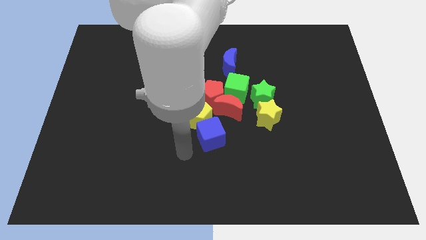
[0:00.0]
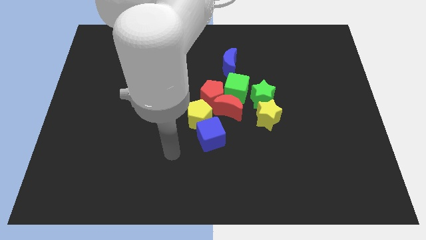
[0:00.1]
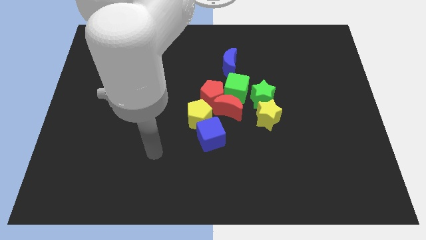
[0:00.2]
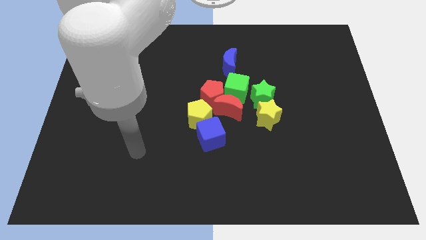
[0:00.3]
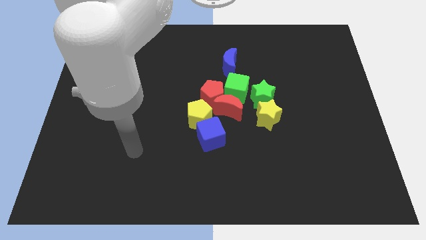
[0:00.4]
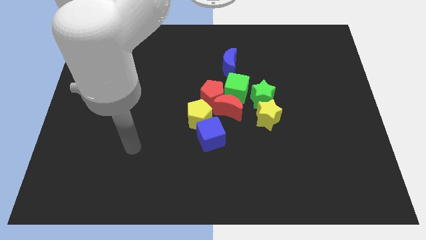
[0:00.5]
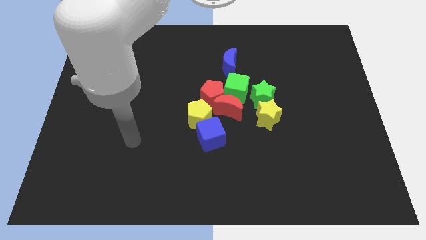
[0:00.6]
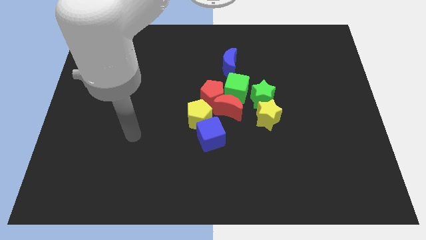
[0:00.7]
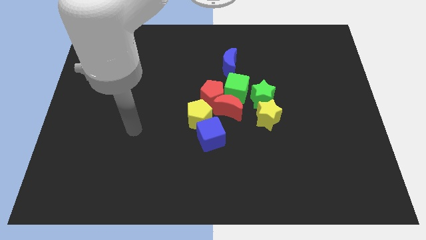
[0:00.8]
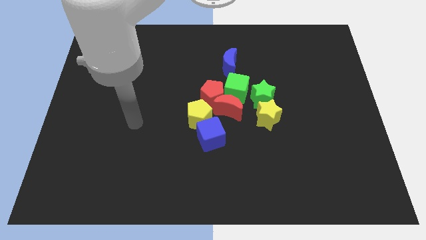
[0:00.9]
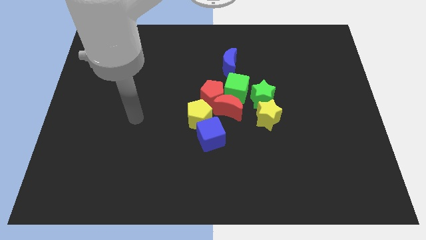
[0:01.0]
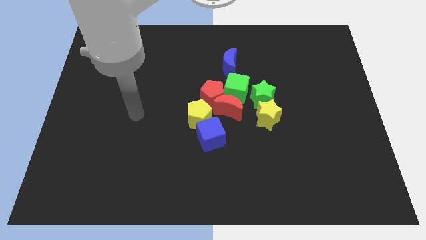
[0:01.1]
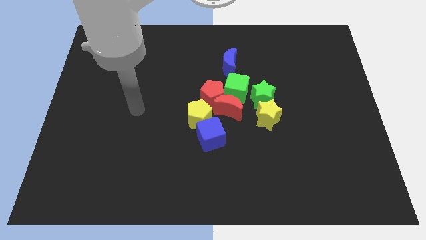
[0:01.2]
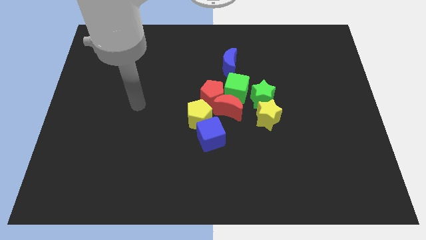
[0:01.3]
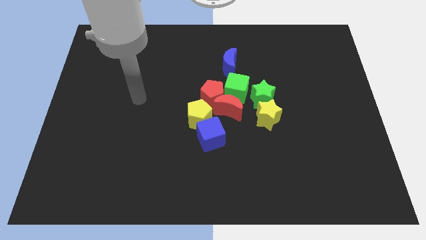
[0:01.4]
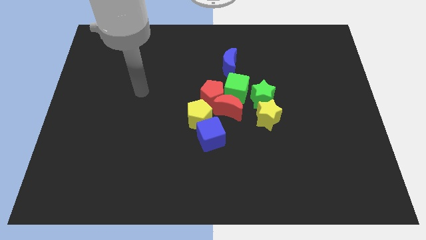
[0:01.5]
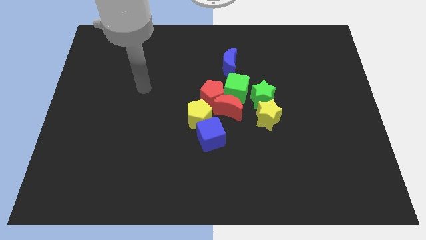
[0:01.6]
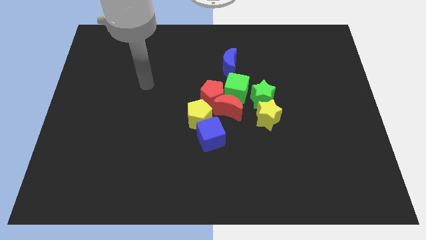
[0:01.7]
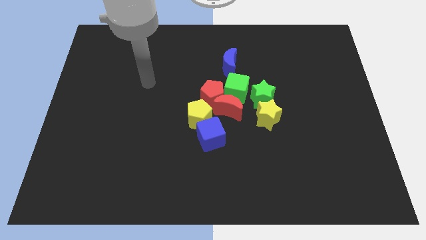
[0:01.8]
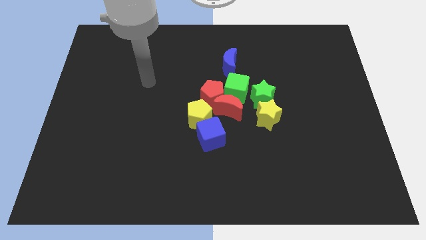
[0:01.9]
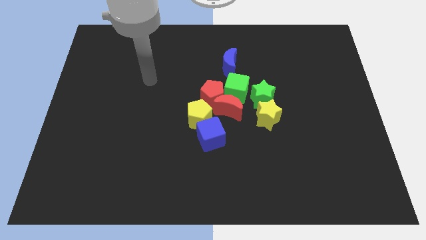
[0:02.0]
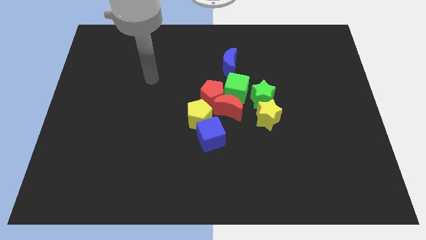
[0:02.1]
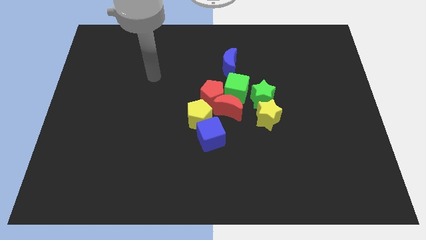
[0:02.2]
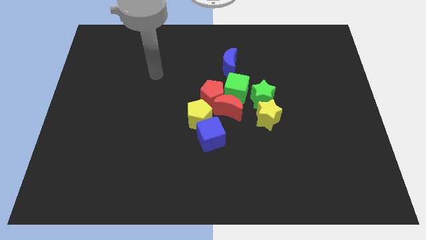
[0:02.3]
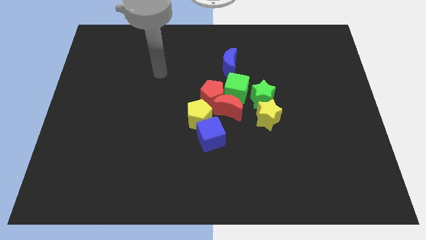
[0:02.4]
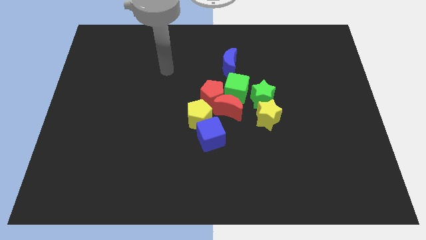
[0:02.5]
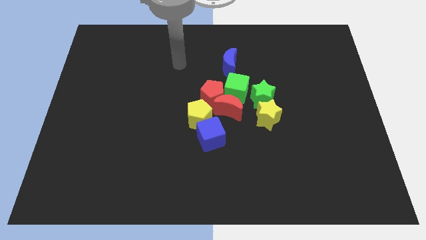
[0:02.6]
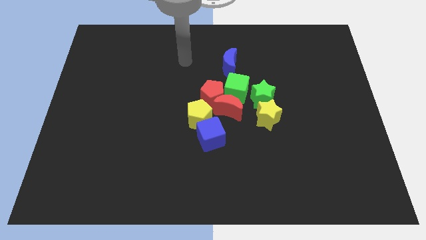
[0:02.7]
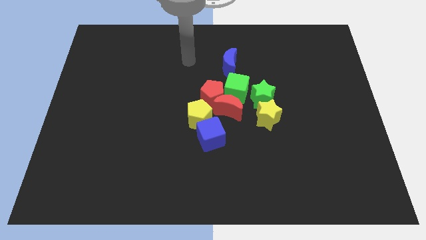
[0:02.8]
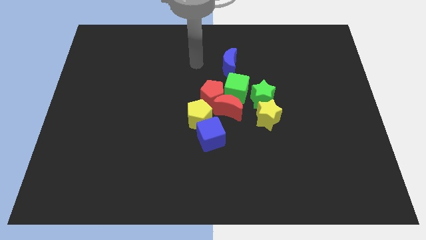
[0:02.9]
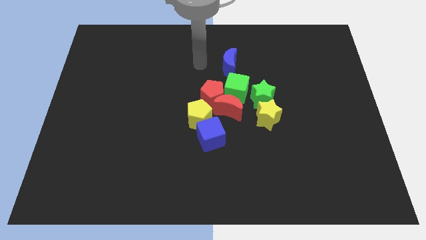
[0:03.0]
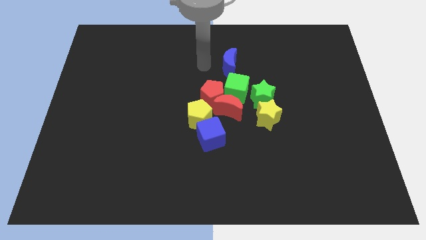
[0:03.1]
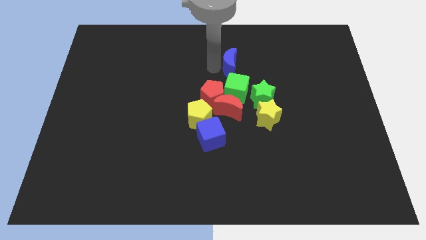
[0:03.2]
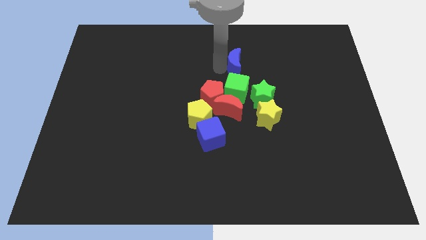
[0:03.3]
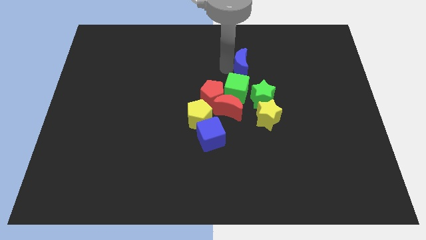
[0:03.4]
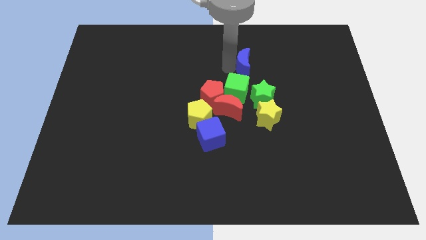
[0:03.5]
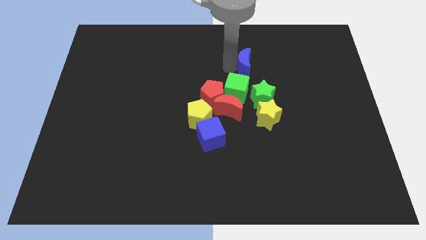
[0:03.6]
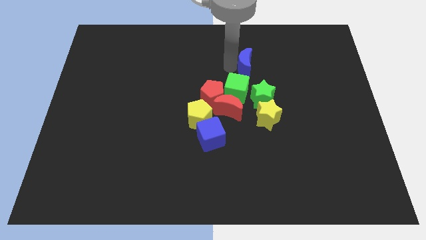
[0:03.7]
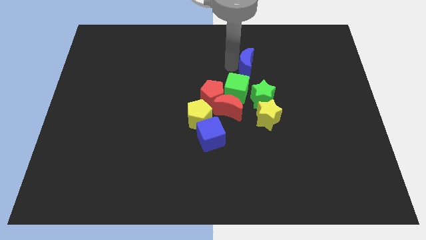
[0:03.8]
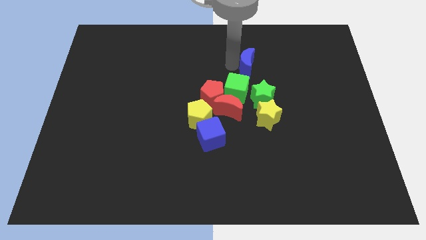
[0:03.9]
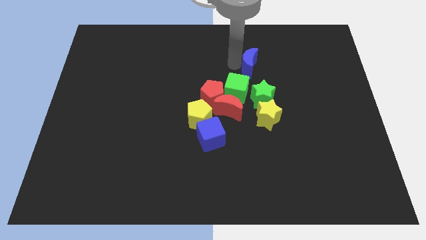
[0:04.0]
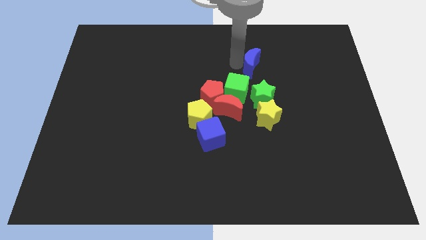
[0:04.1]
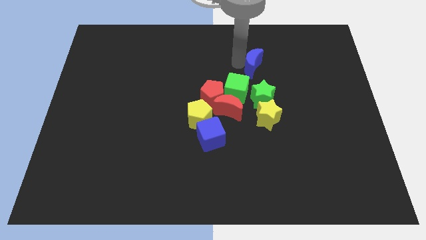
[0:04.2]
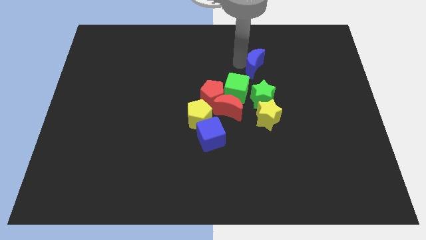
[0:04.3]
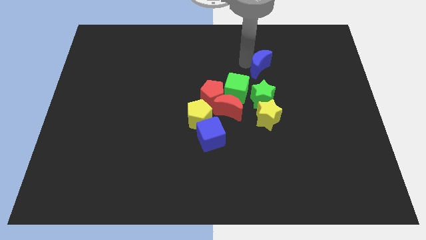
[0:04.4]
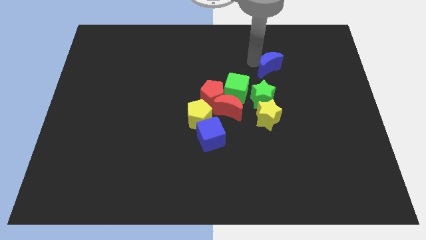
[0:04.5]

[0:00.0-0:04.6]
slide the blue moon to the top side of the green star

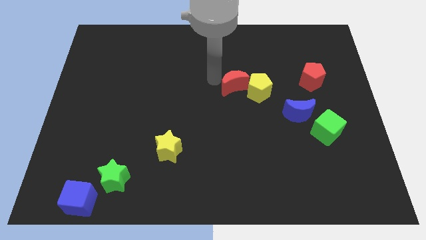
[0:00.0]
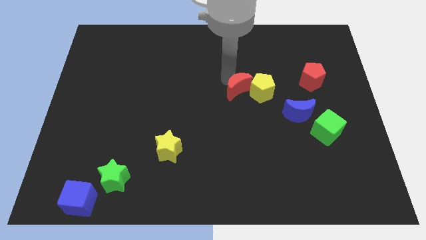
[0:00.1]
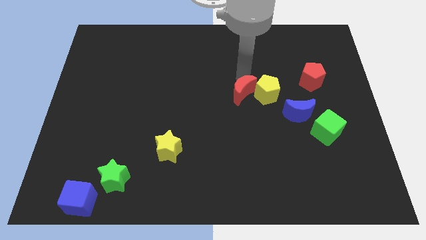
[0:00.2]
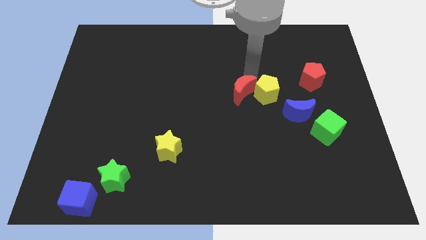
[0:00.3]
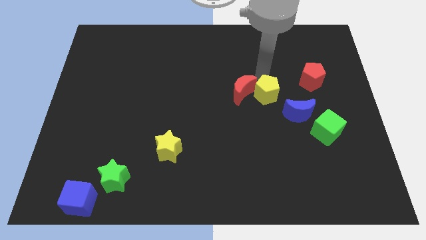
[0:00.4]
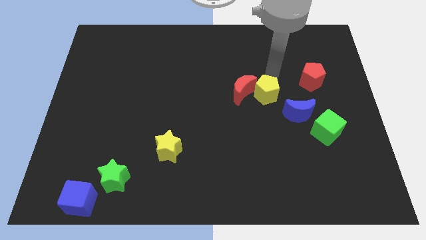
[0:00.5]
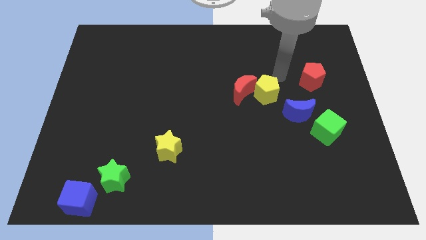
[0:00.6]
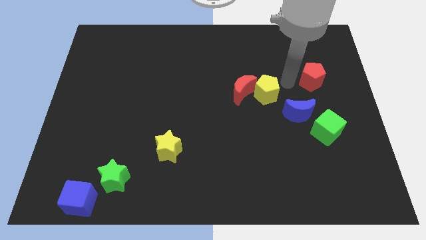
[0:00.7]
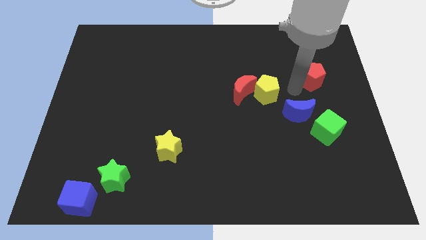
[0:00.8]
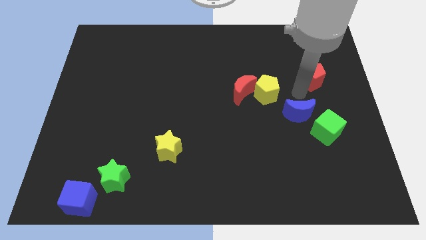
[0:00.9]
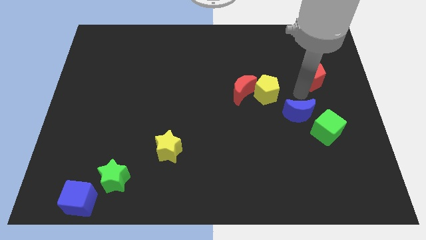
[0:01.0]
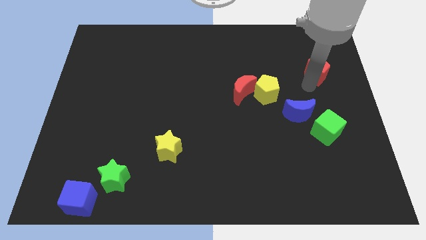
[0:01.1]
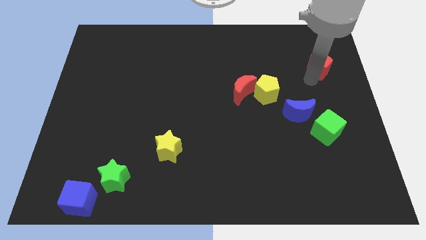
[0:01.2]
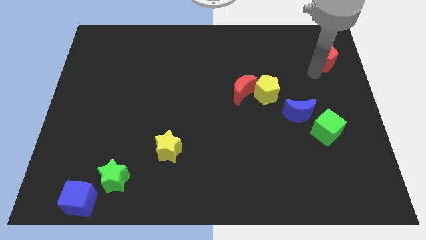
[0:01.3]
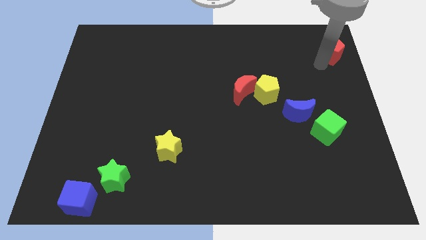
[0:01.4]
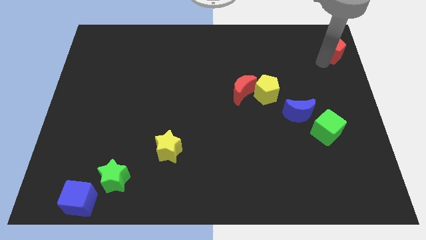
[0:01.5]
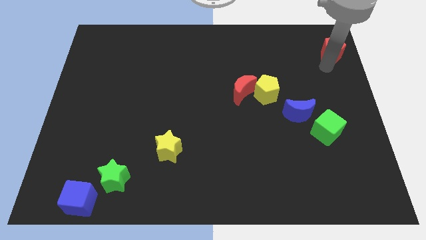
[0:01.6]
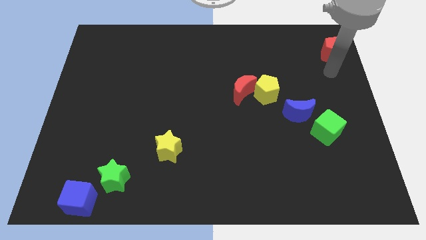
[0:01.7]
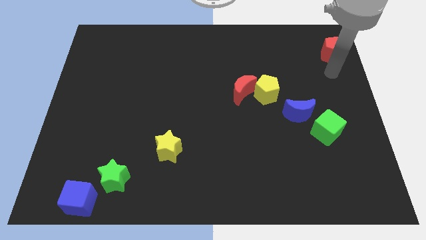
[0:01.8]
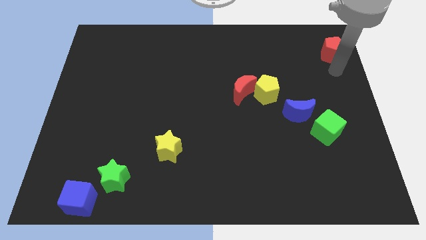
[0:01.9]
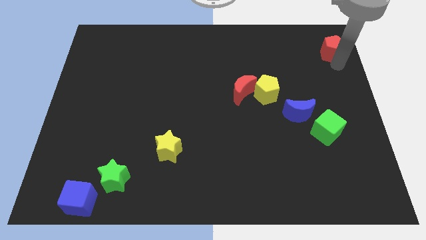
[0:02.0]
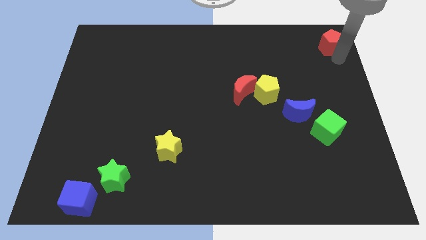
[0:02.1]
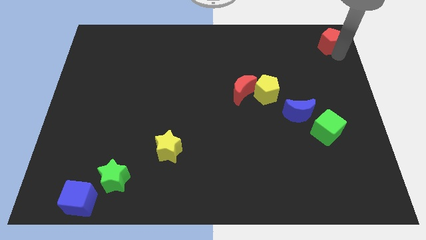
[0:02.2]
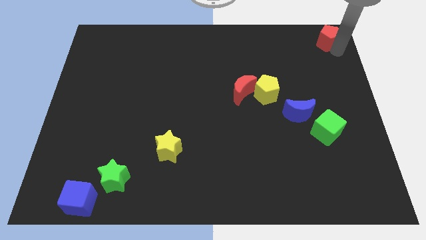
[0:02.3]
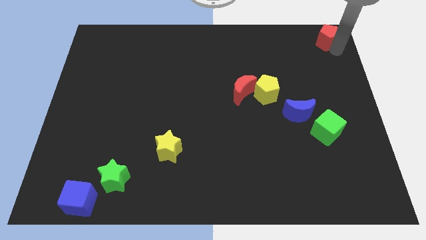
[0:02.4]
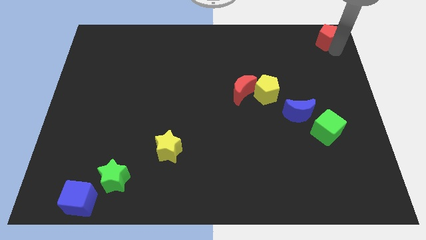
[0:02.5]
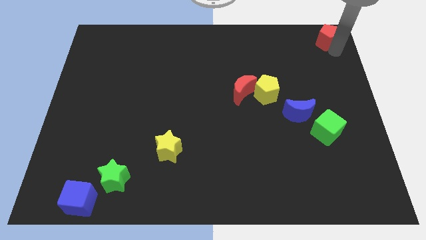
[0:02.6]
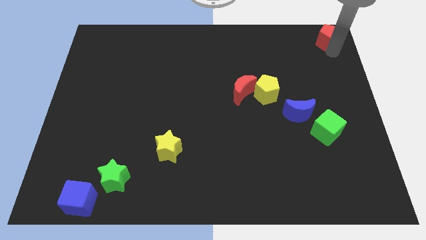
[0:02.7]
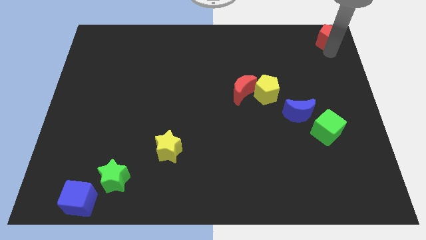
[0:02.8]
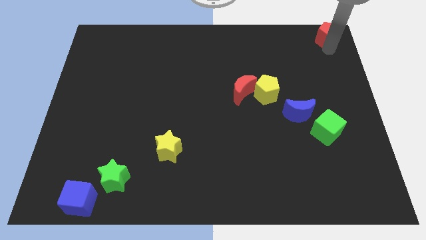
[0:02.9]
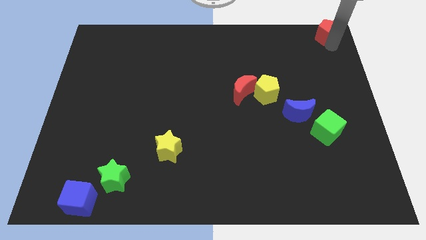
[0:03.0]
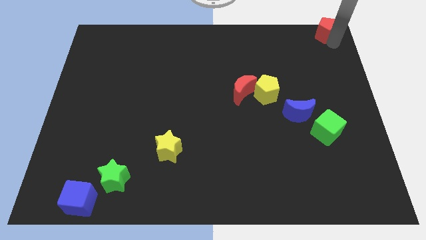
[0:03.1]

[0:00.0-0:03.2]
push the red pentagon towards the top right

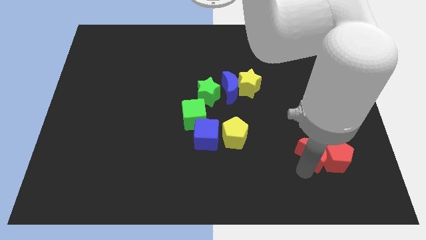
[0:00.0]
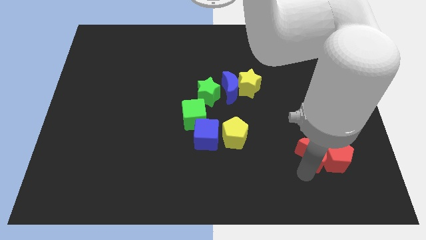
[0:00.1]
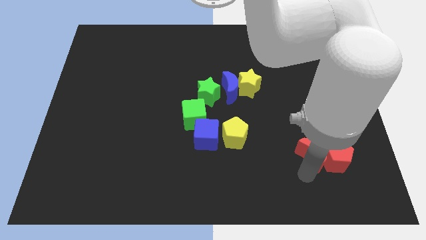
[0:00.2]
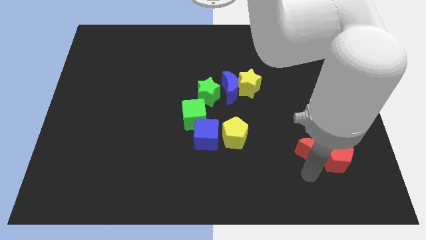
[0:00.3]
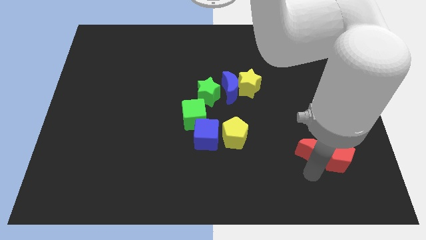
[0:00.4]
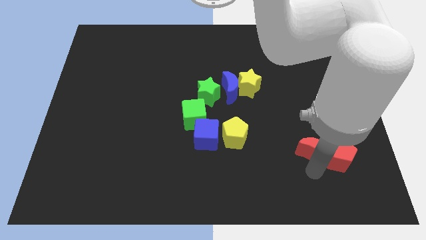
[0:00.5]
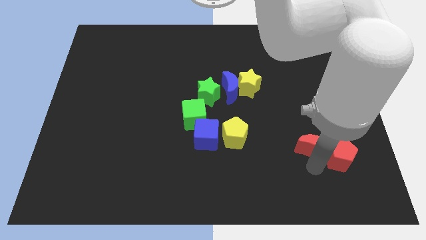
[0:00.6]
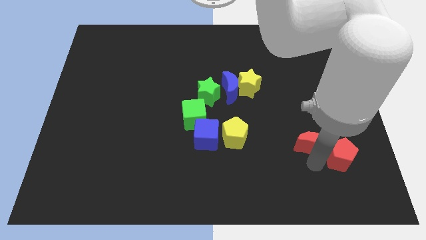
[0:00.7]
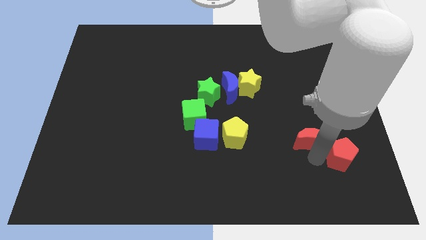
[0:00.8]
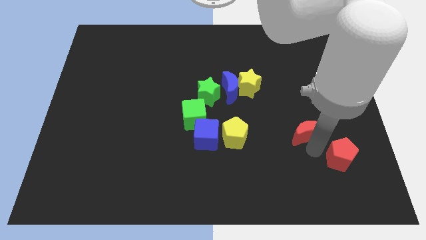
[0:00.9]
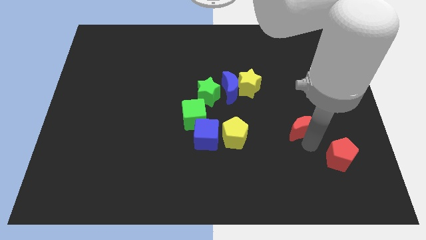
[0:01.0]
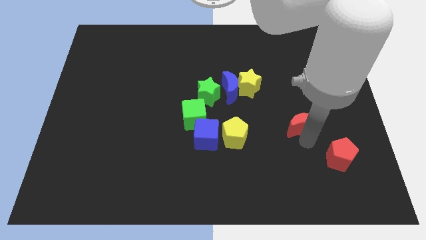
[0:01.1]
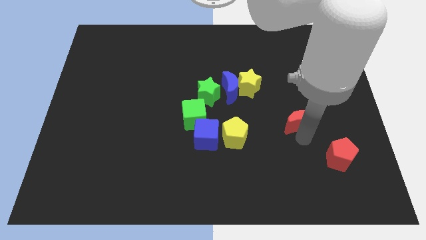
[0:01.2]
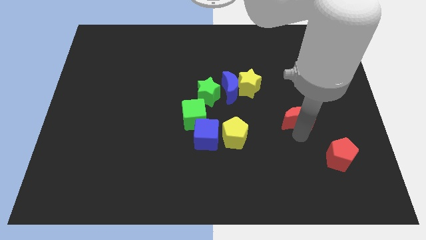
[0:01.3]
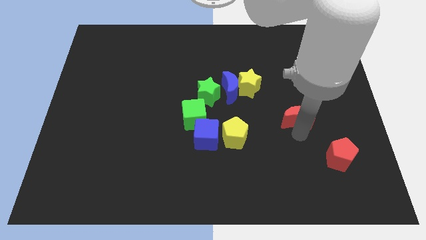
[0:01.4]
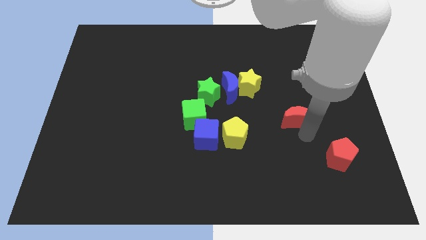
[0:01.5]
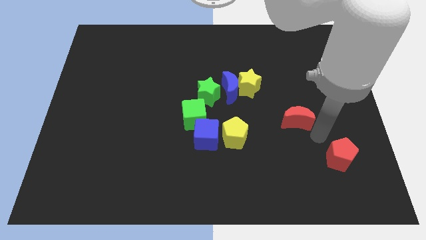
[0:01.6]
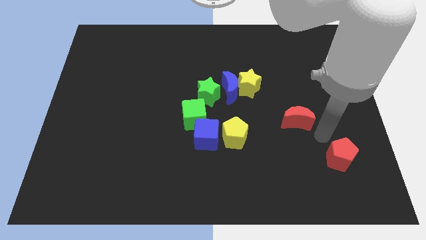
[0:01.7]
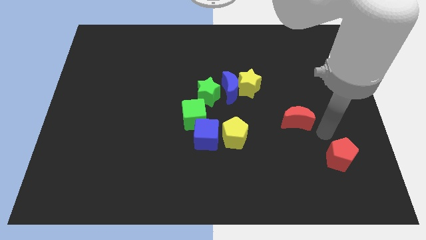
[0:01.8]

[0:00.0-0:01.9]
separate red moon from the red pentagon
